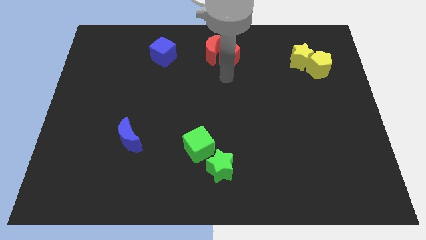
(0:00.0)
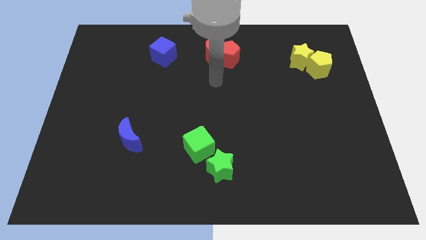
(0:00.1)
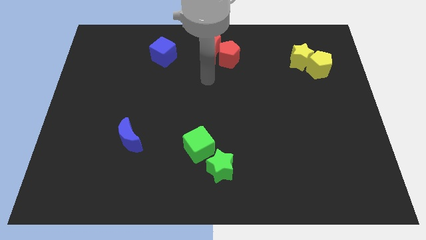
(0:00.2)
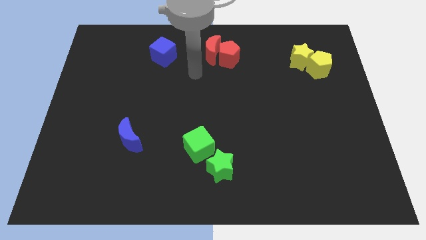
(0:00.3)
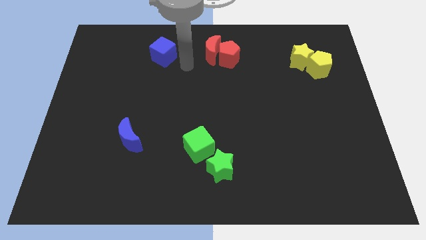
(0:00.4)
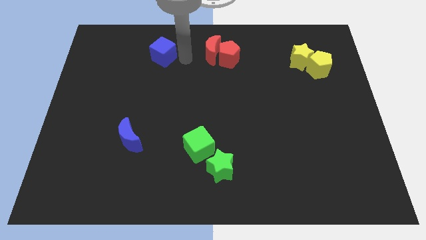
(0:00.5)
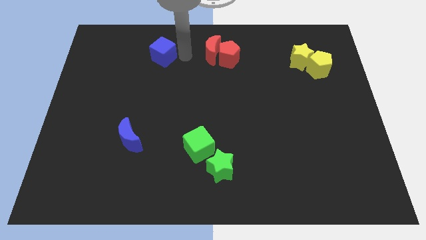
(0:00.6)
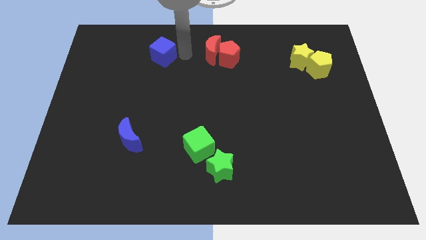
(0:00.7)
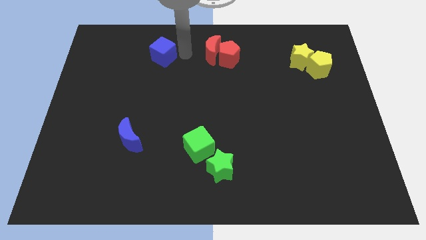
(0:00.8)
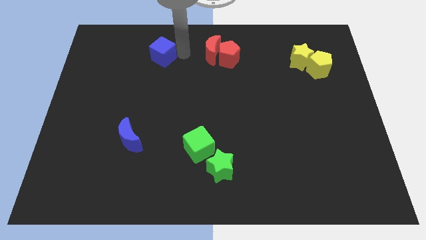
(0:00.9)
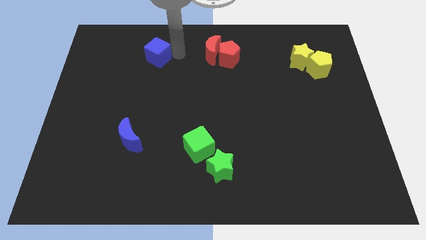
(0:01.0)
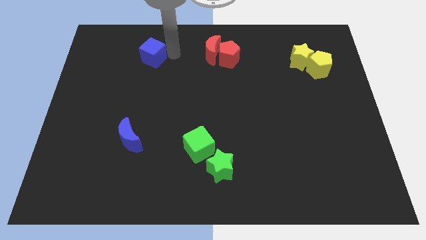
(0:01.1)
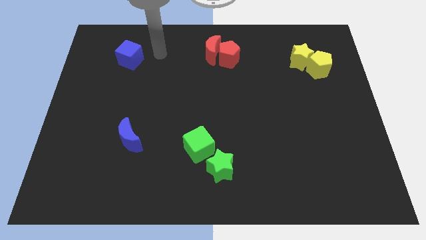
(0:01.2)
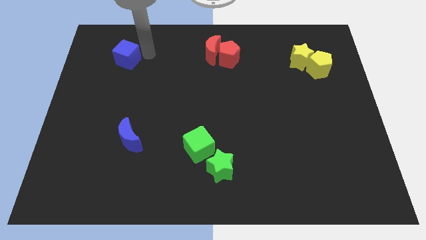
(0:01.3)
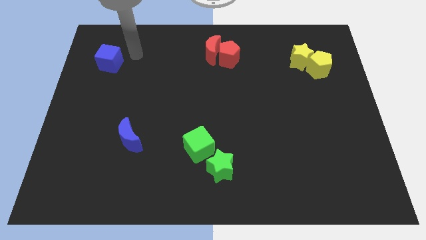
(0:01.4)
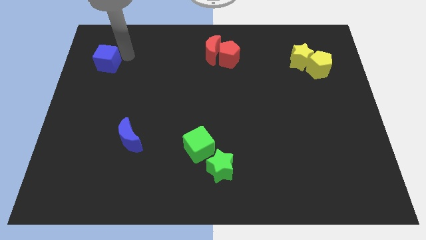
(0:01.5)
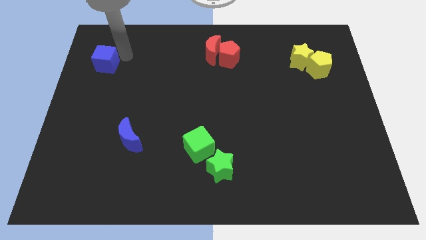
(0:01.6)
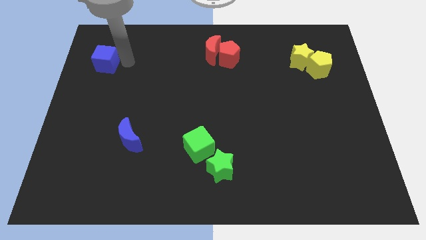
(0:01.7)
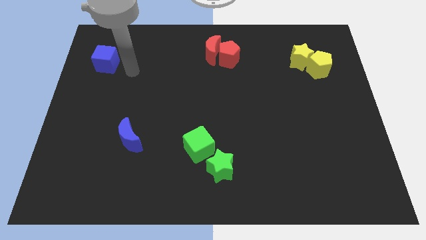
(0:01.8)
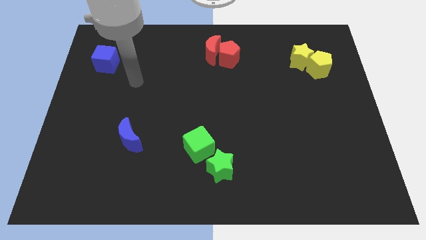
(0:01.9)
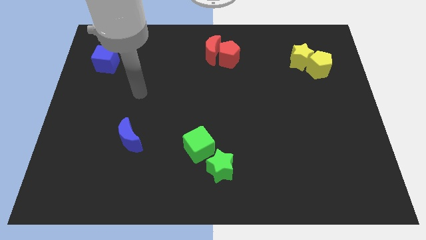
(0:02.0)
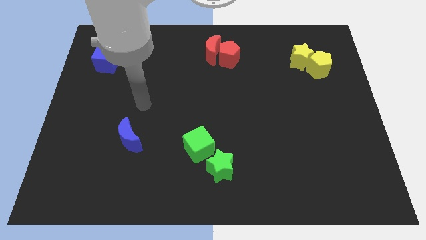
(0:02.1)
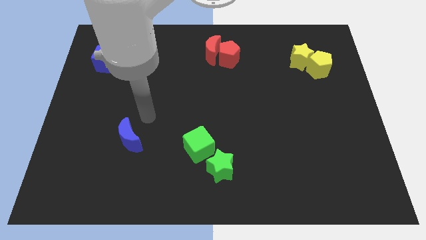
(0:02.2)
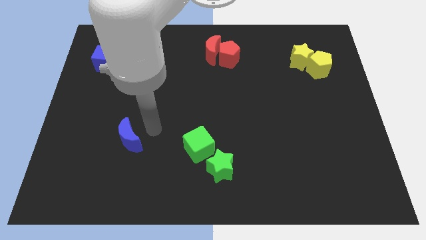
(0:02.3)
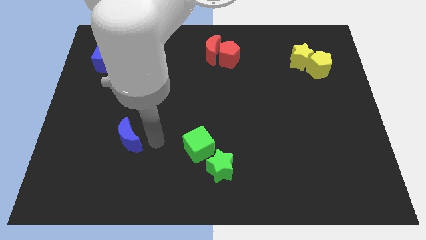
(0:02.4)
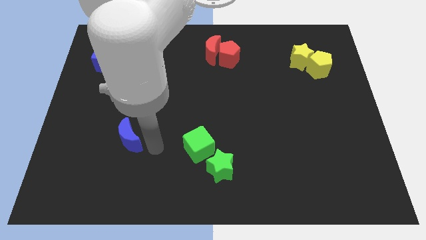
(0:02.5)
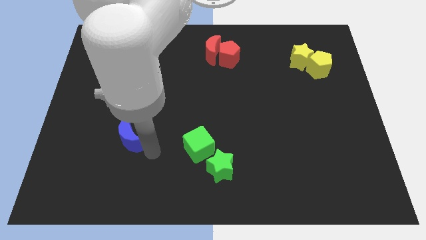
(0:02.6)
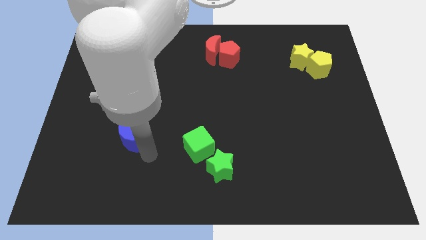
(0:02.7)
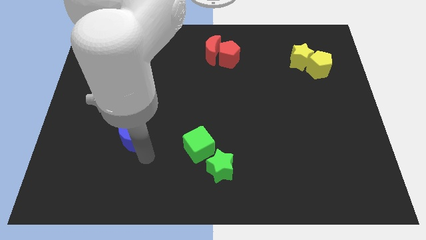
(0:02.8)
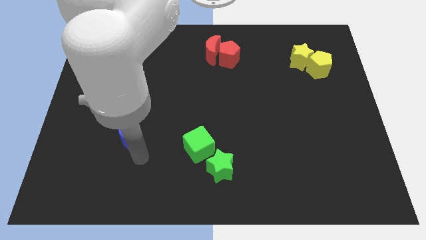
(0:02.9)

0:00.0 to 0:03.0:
push the blue cube slightly to the left

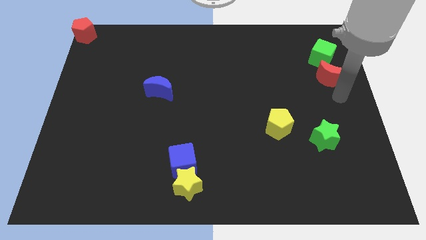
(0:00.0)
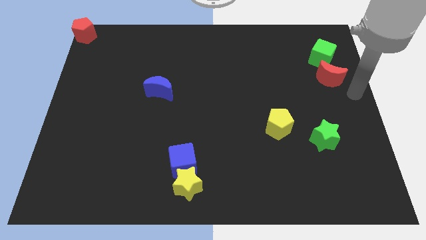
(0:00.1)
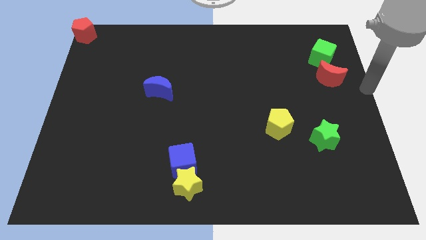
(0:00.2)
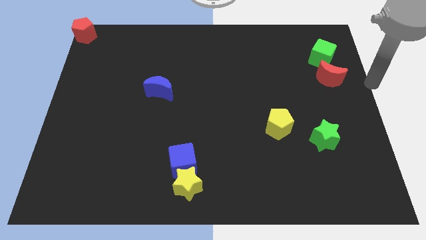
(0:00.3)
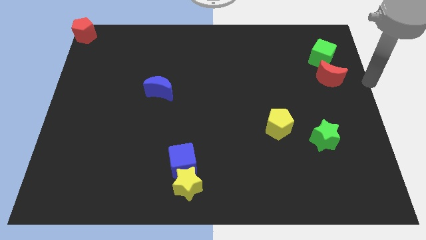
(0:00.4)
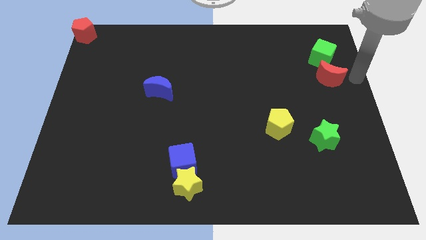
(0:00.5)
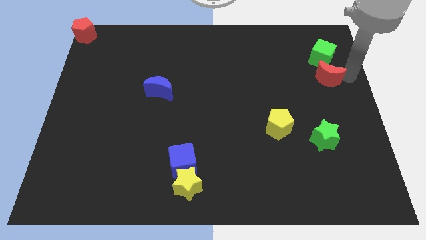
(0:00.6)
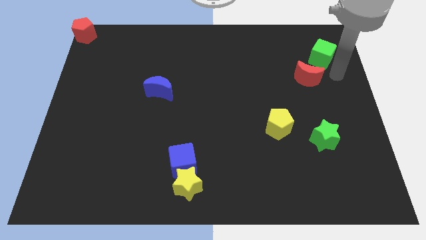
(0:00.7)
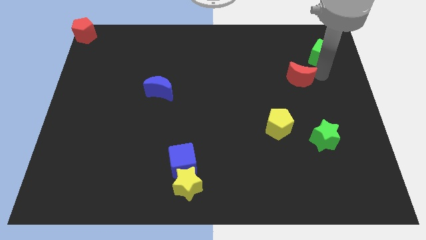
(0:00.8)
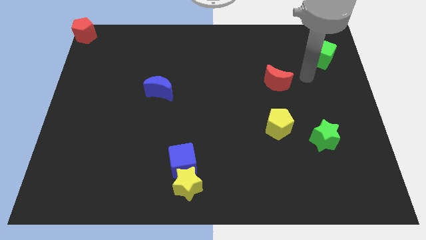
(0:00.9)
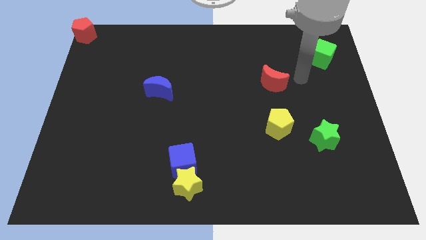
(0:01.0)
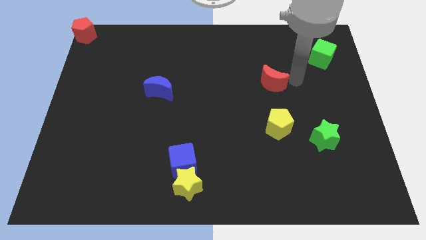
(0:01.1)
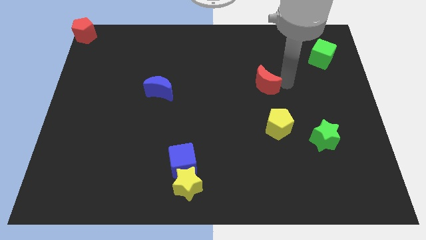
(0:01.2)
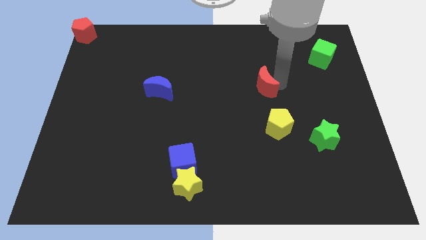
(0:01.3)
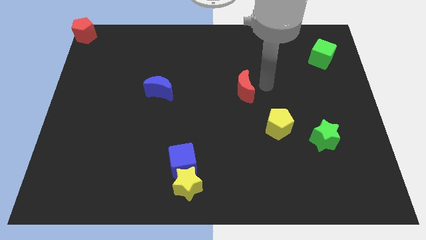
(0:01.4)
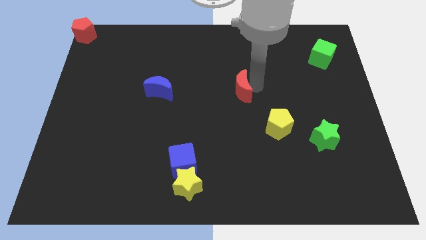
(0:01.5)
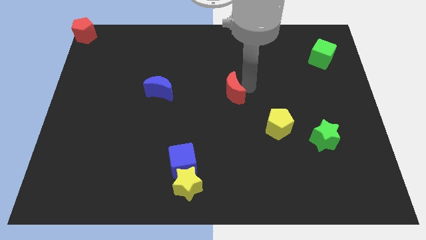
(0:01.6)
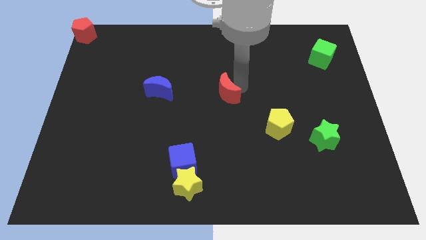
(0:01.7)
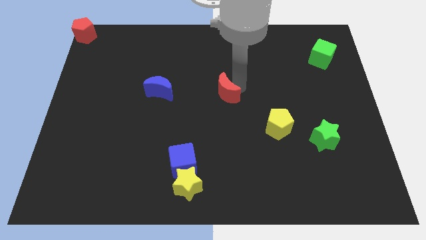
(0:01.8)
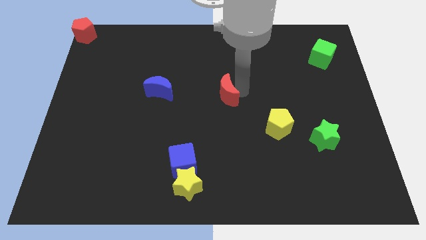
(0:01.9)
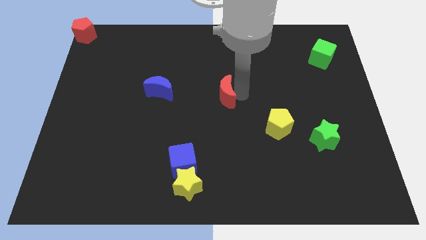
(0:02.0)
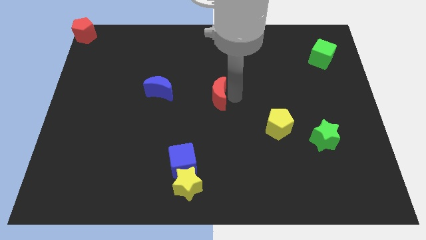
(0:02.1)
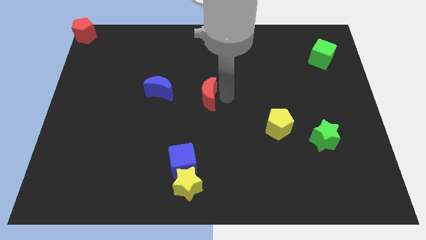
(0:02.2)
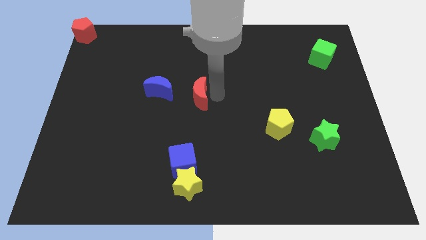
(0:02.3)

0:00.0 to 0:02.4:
place the red moon in between the blue moon and yellow pentagon

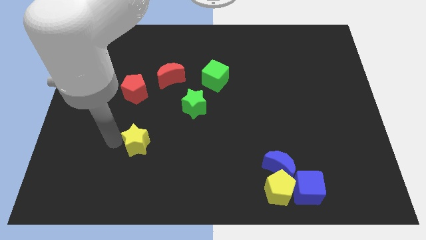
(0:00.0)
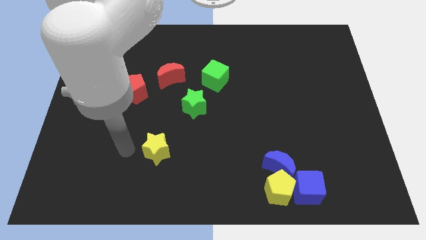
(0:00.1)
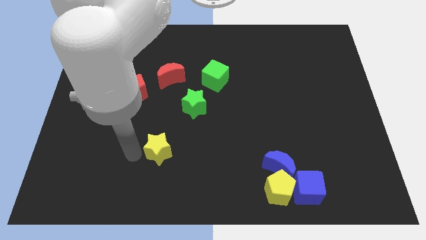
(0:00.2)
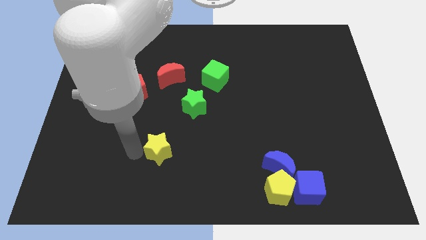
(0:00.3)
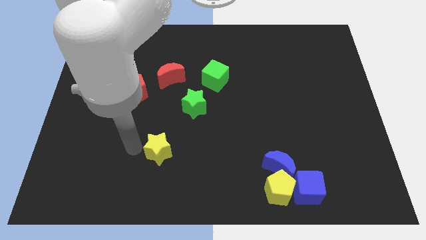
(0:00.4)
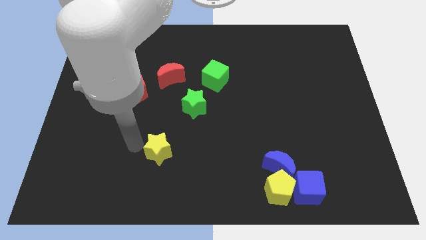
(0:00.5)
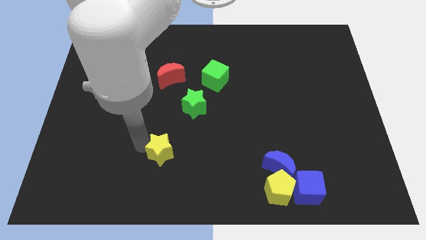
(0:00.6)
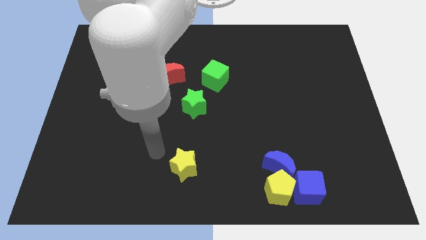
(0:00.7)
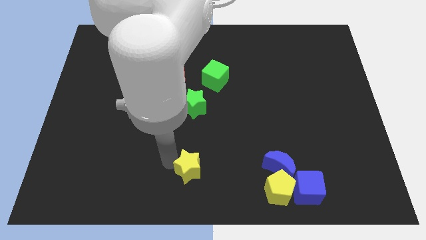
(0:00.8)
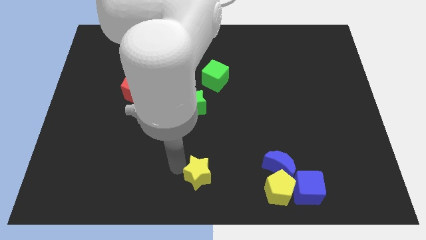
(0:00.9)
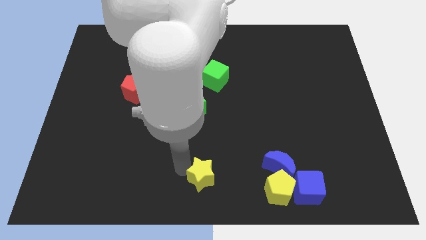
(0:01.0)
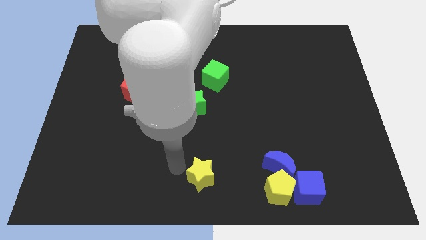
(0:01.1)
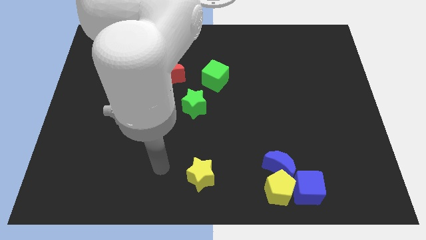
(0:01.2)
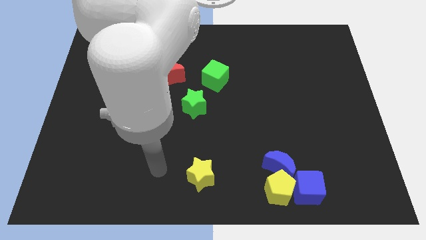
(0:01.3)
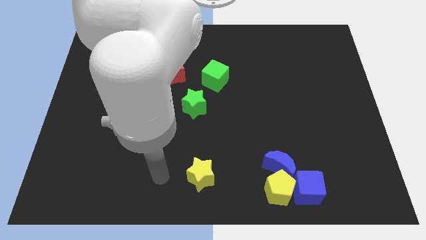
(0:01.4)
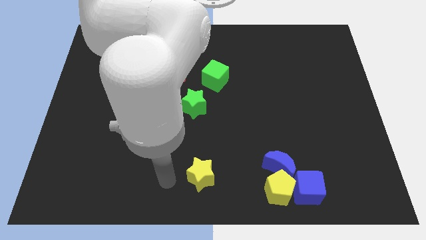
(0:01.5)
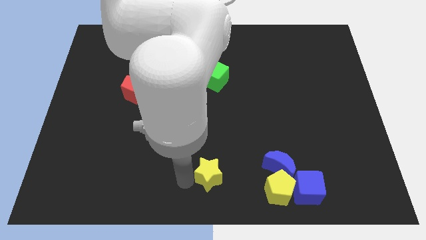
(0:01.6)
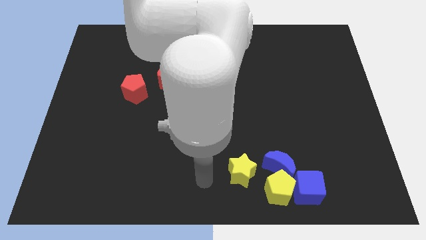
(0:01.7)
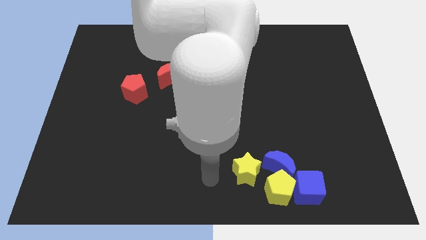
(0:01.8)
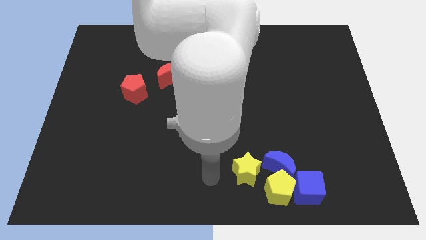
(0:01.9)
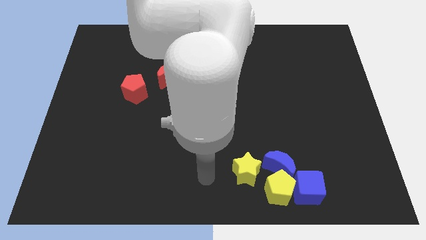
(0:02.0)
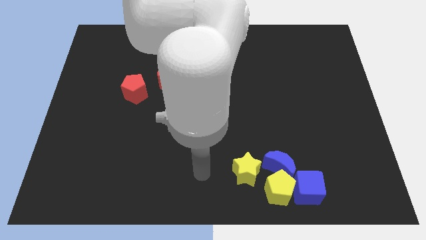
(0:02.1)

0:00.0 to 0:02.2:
push the yellow star to the left of the blue crescent

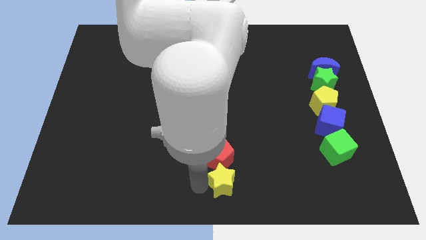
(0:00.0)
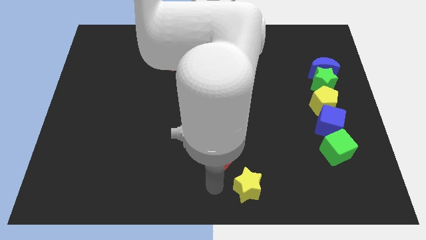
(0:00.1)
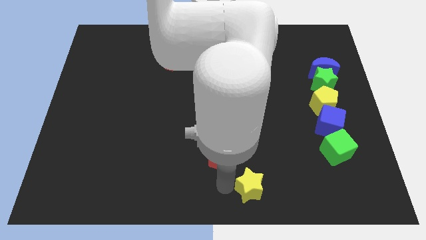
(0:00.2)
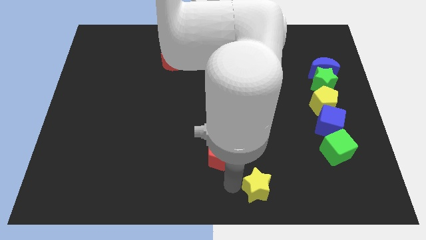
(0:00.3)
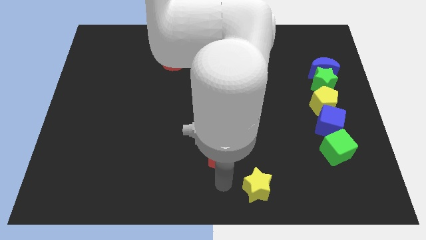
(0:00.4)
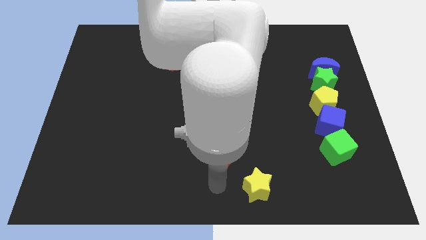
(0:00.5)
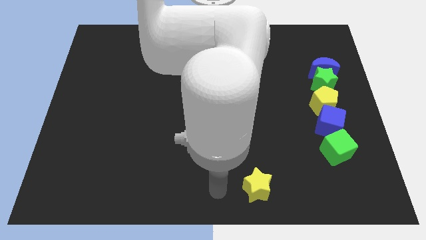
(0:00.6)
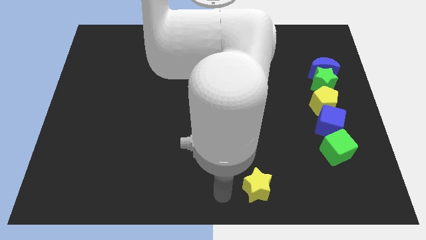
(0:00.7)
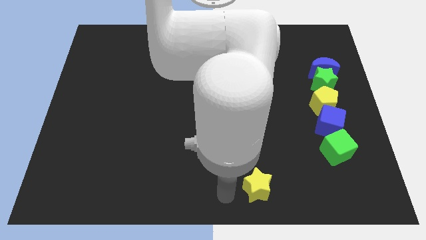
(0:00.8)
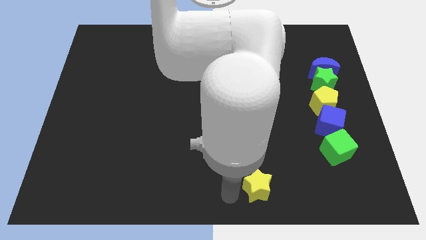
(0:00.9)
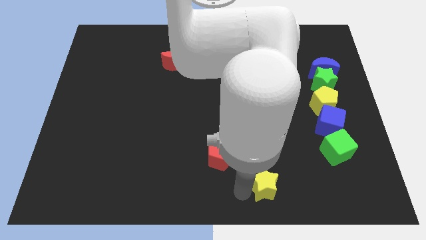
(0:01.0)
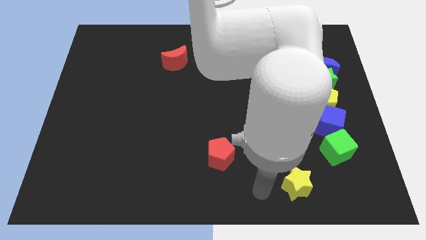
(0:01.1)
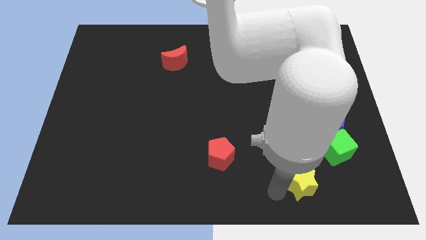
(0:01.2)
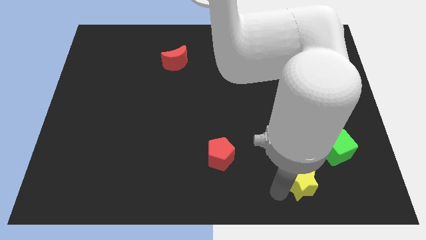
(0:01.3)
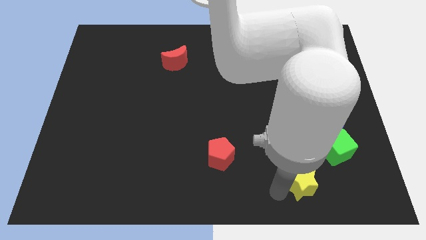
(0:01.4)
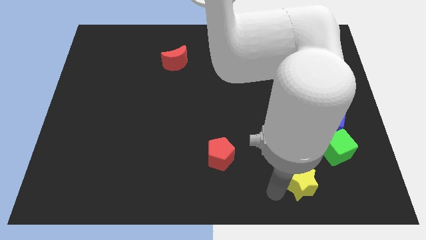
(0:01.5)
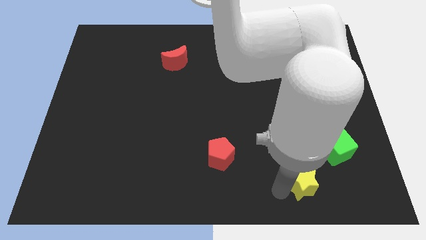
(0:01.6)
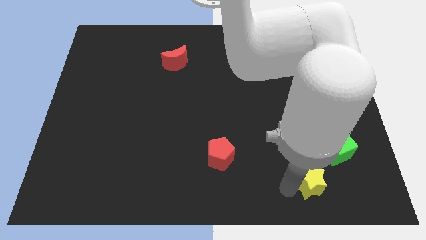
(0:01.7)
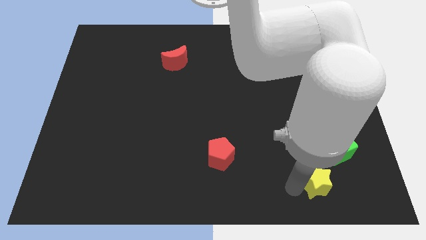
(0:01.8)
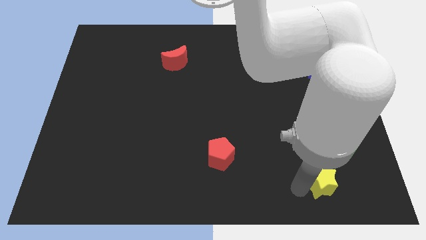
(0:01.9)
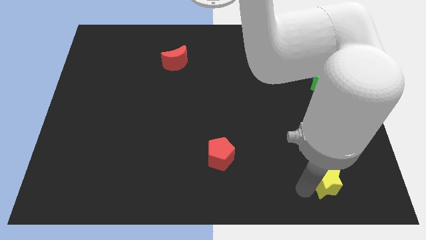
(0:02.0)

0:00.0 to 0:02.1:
slide the yellow star diagonally to the green star
